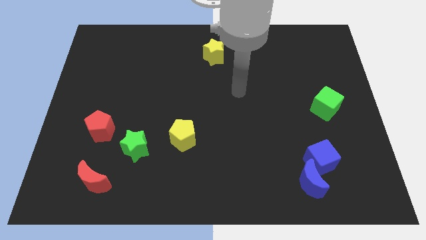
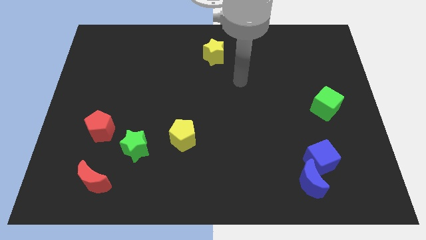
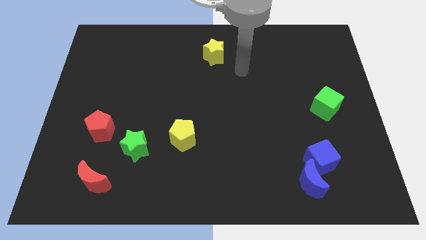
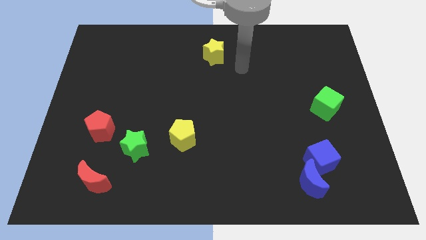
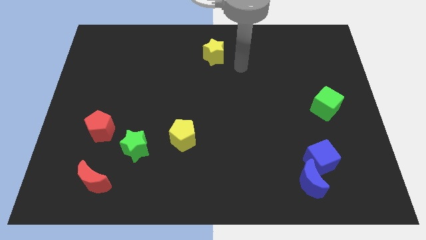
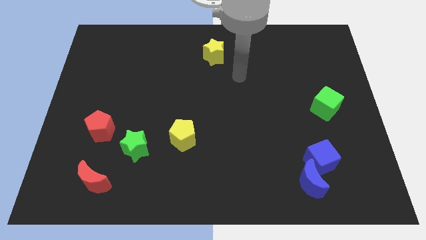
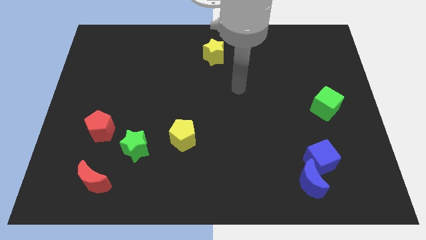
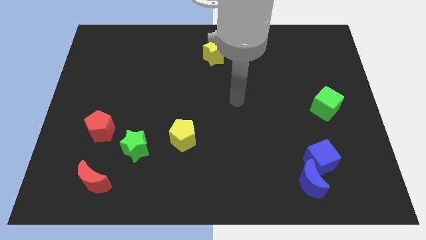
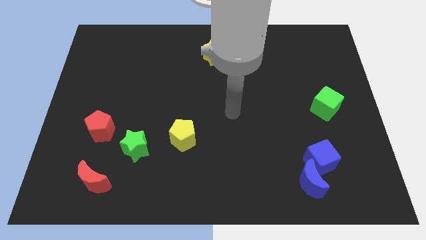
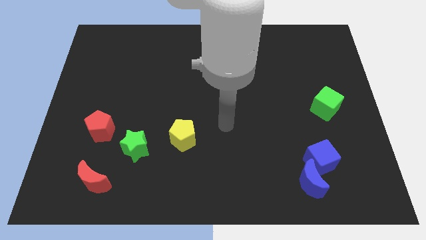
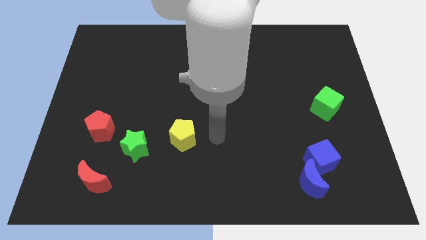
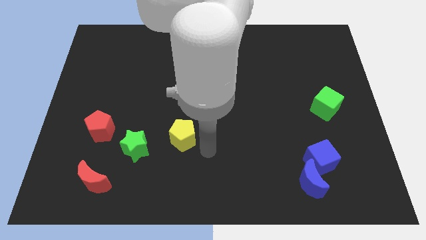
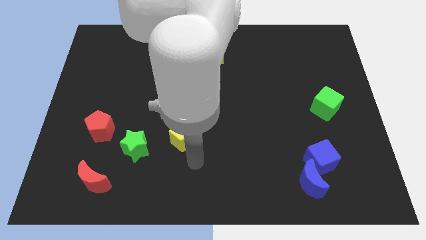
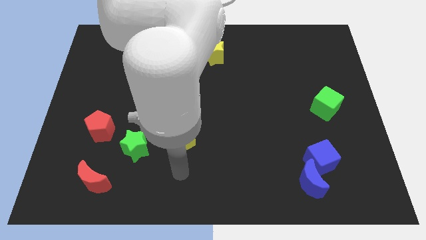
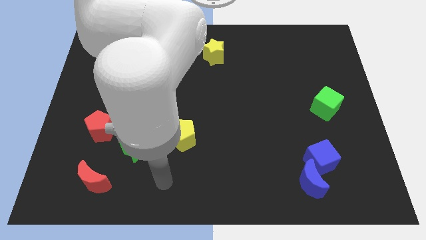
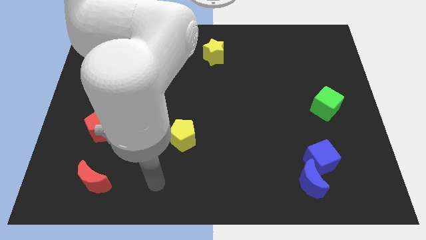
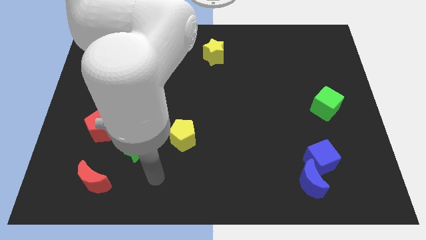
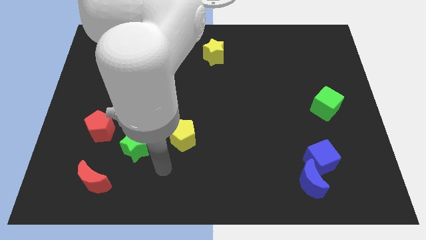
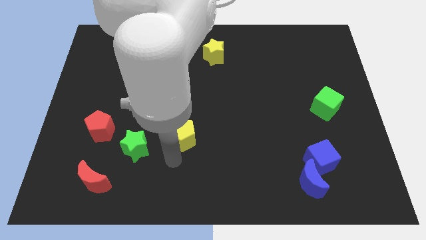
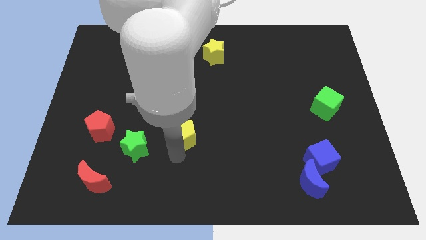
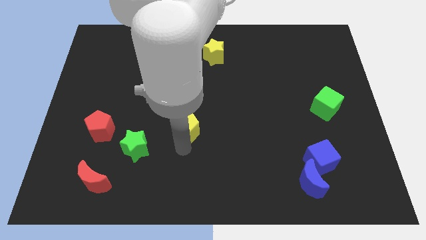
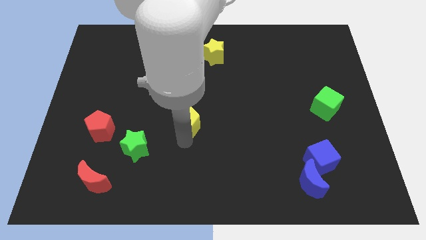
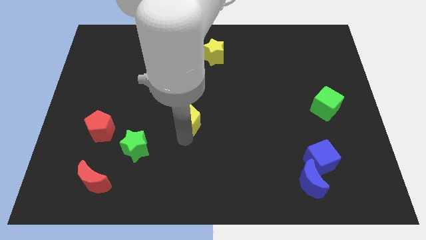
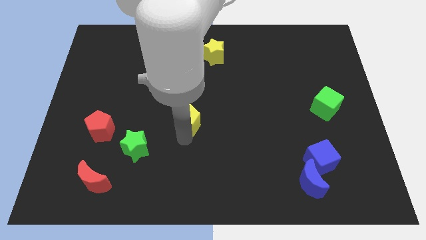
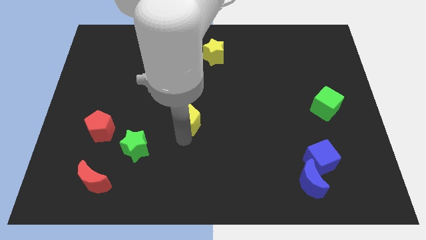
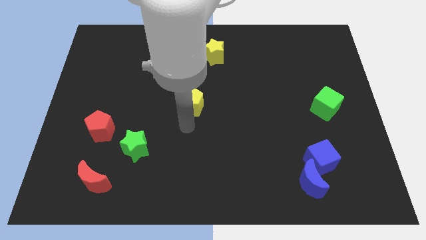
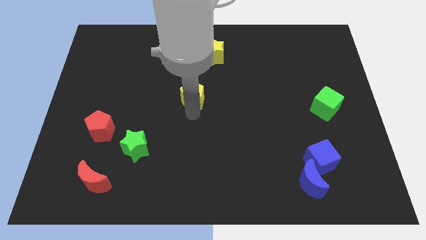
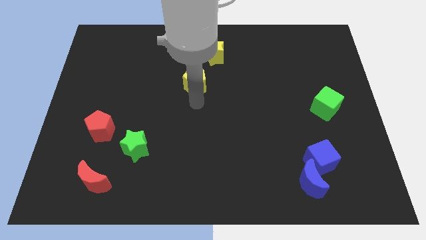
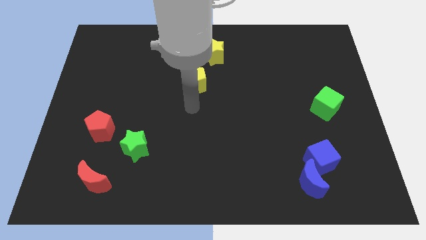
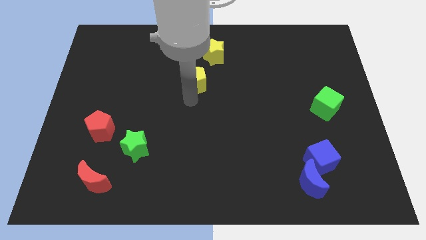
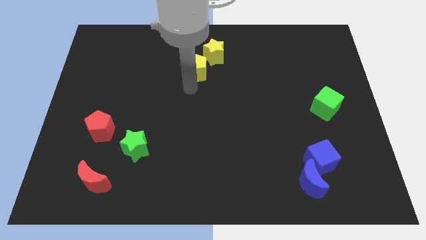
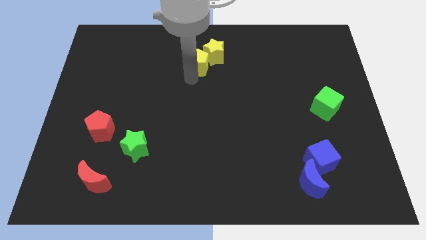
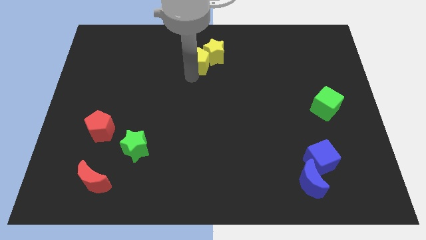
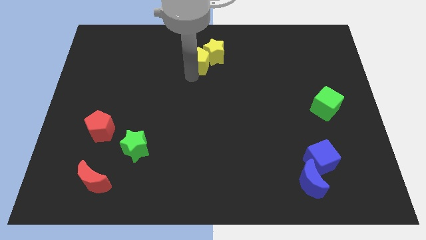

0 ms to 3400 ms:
move the yellow pentagon into the bottom left side of the yellow star

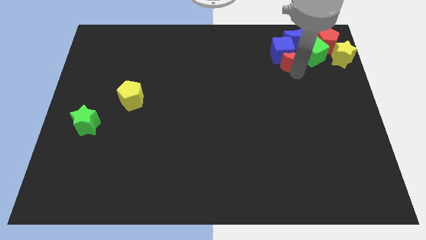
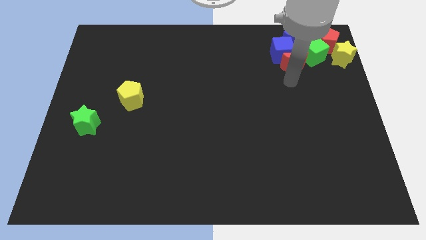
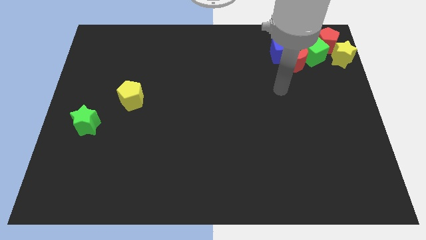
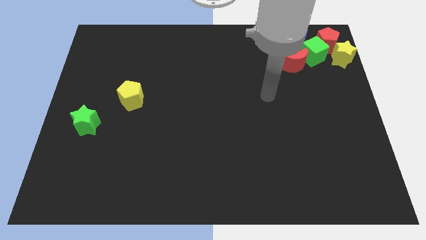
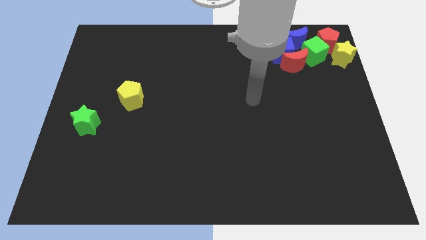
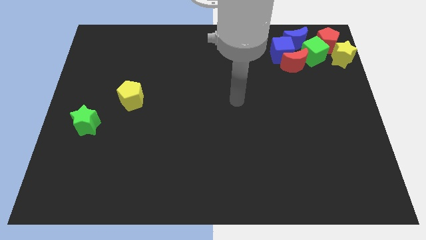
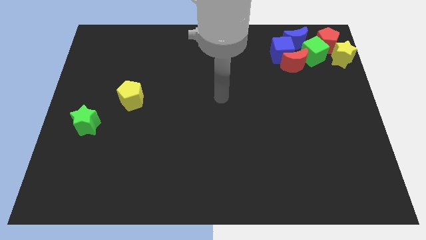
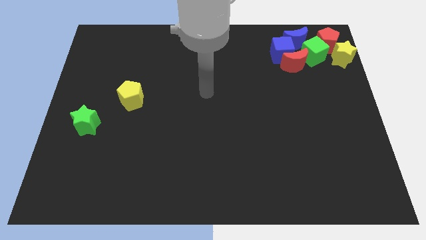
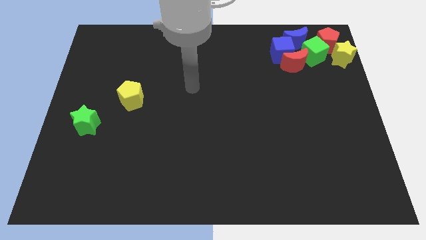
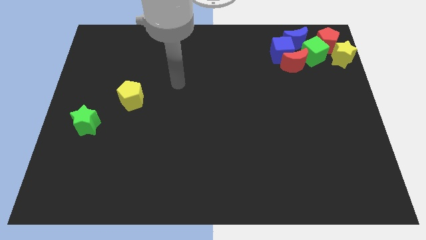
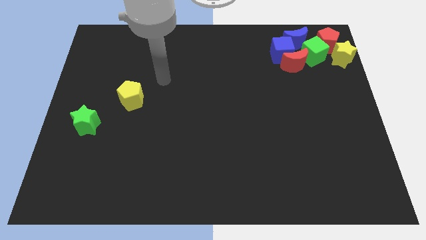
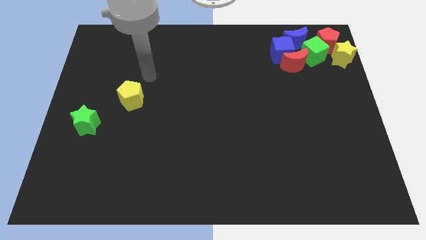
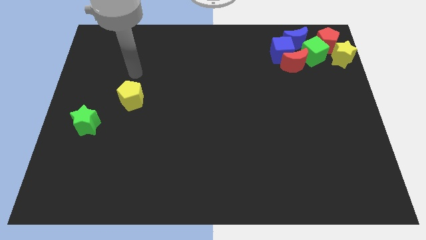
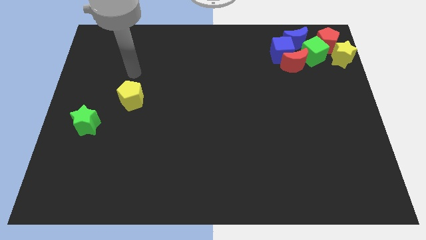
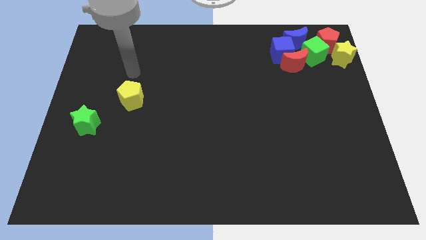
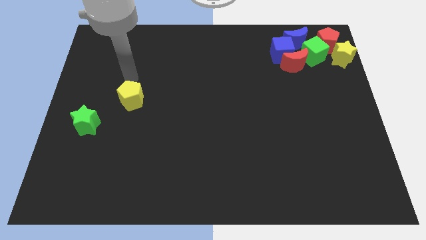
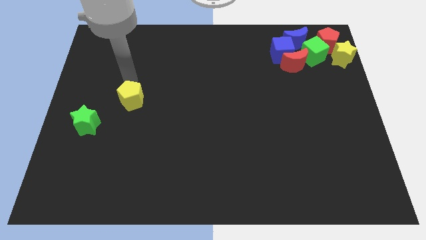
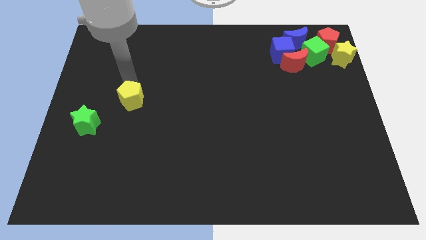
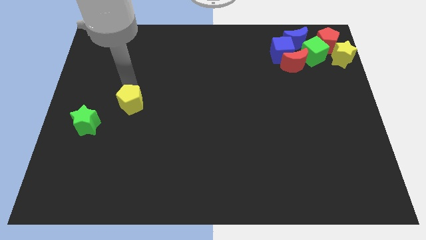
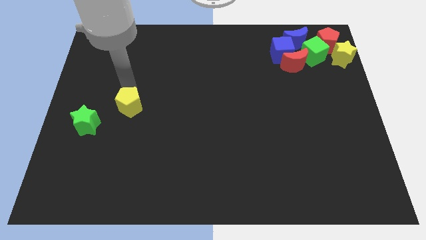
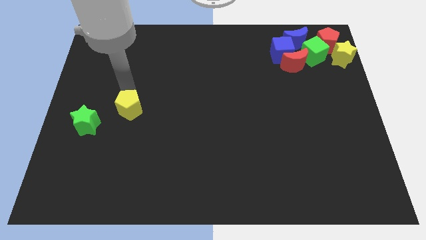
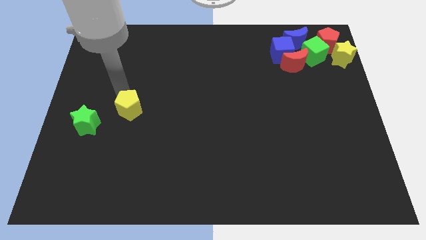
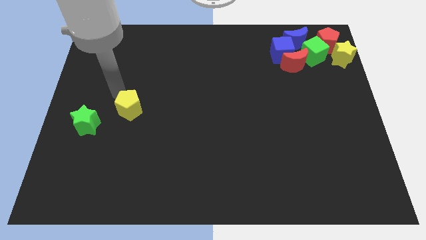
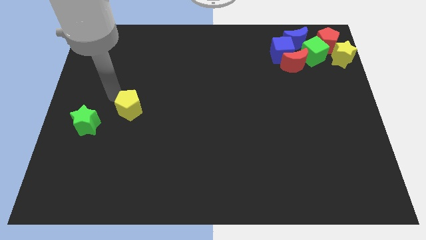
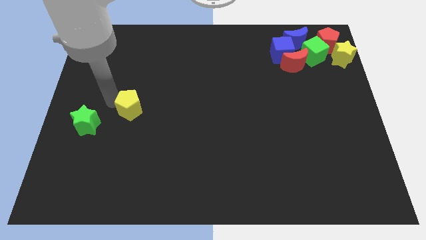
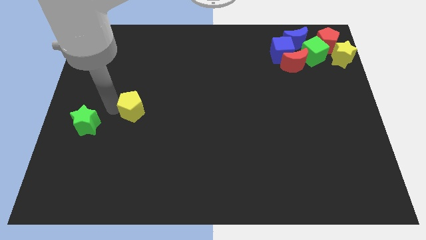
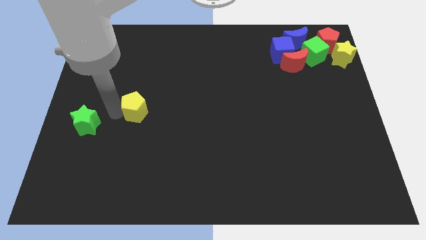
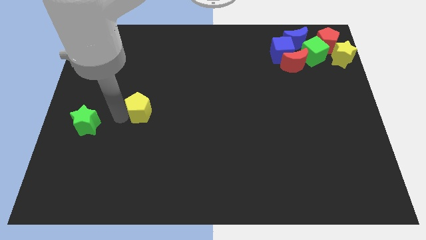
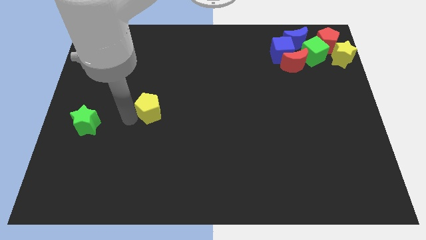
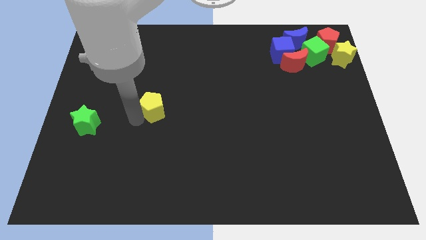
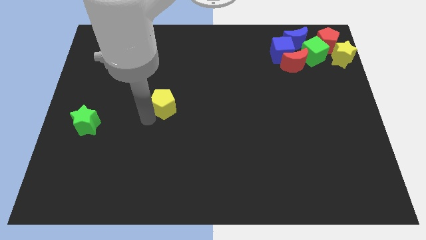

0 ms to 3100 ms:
push the yellow pentagon towards the center of the board

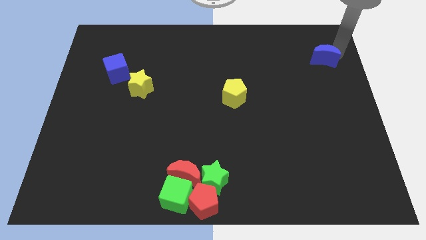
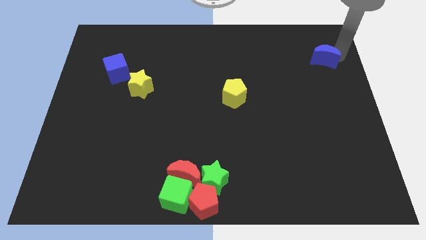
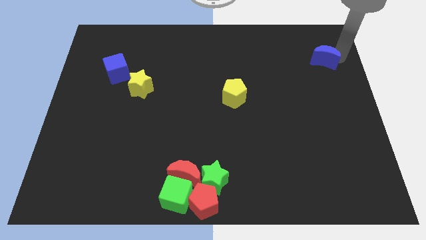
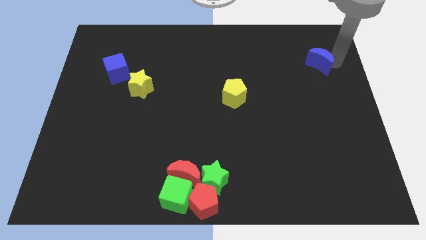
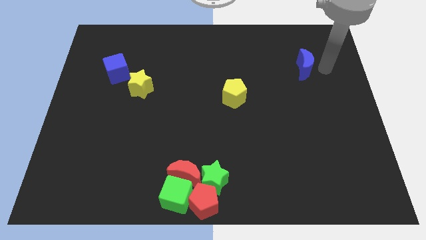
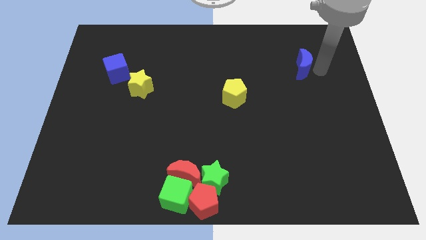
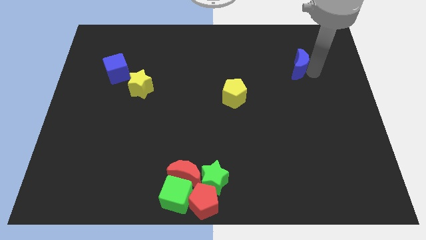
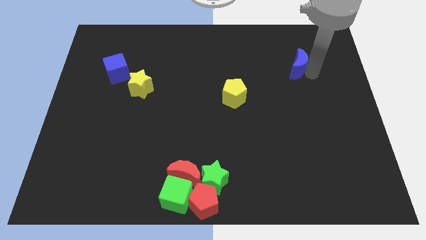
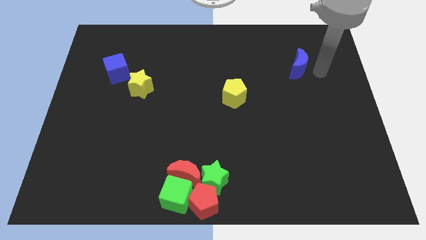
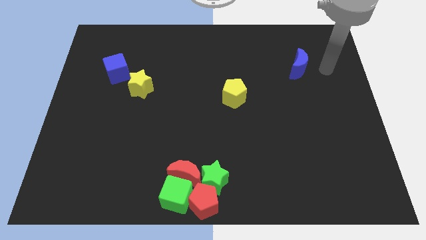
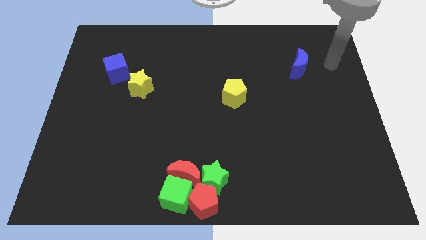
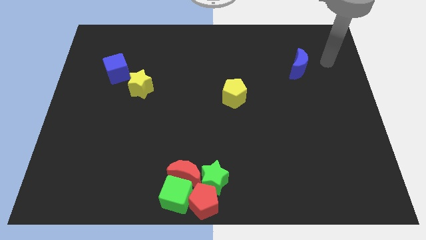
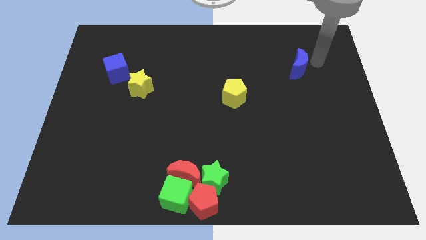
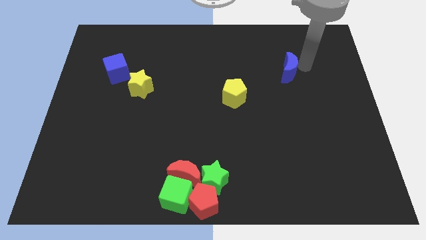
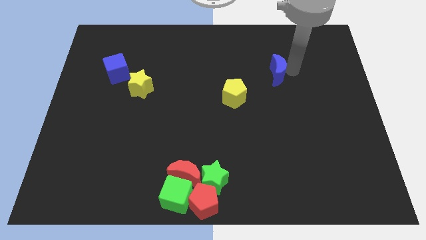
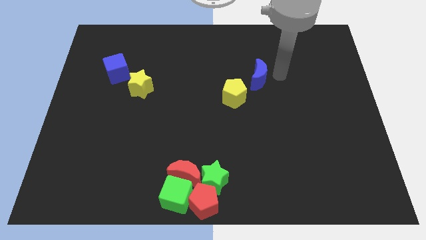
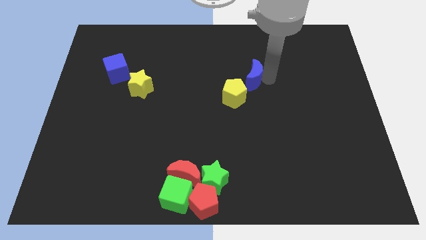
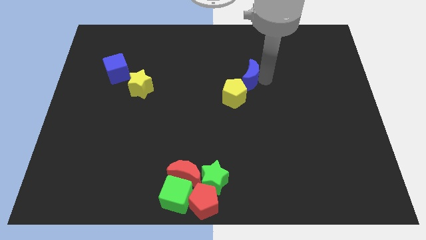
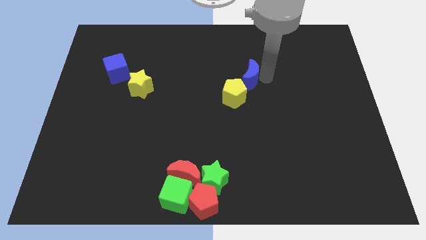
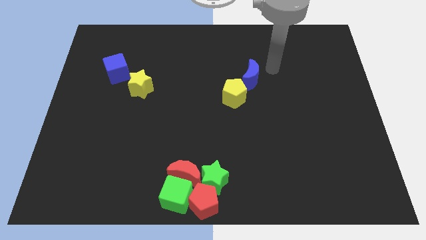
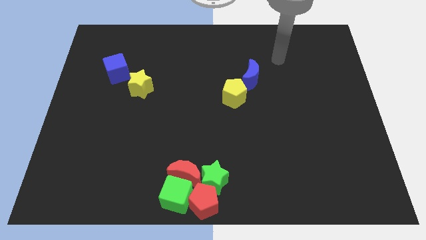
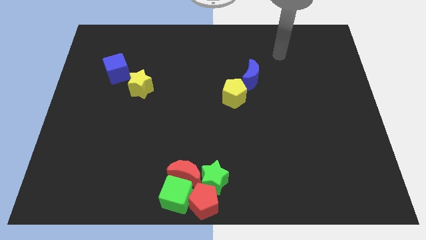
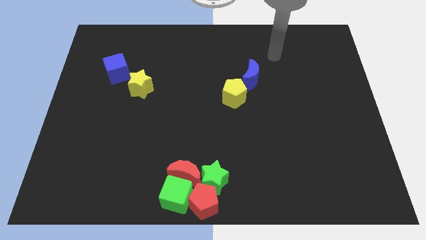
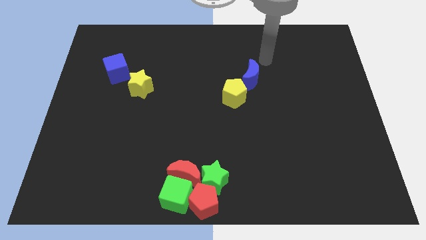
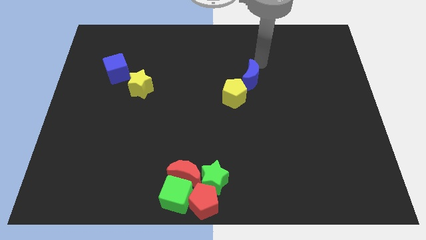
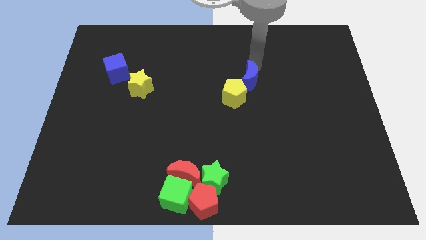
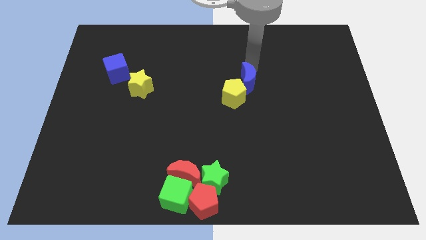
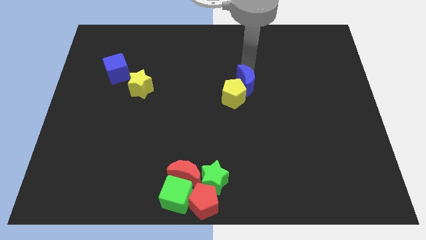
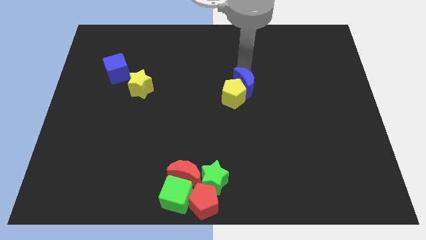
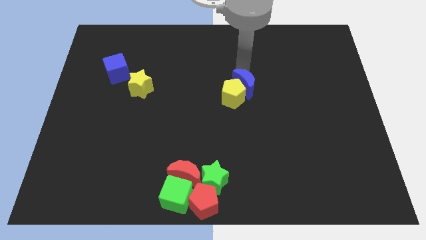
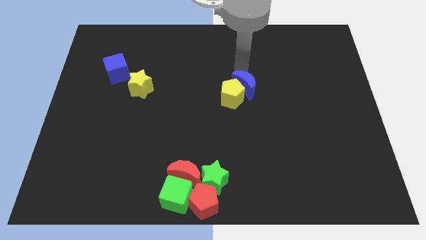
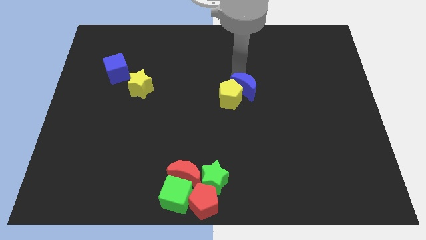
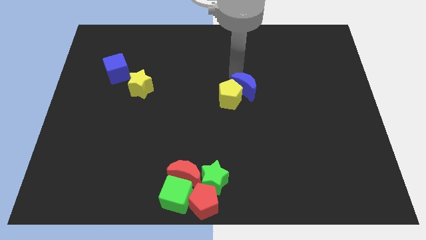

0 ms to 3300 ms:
move the blue crescent diagonal above the yellow pentagon at the center
